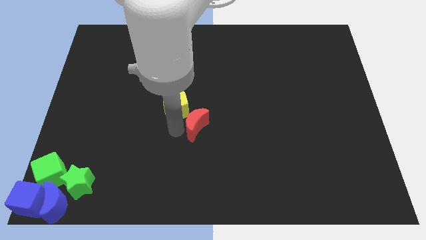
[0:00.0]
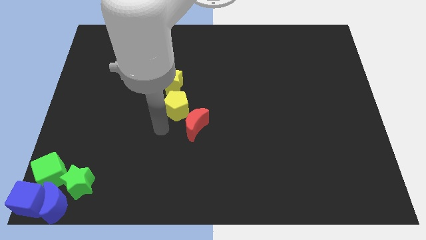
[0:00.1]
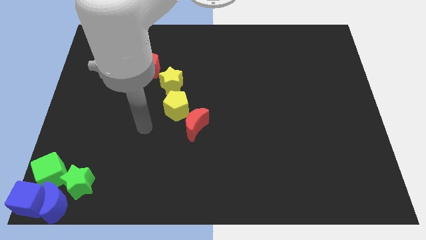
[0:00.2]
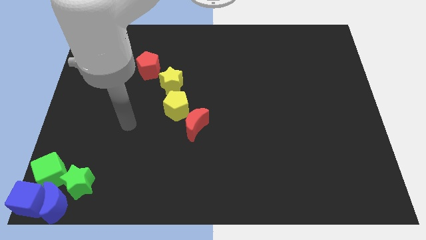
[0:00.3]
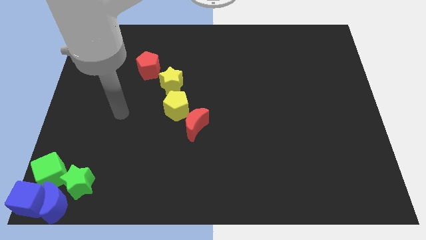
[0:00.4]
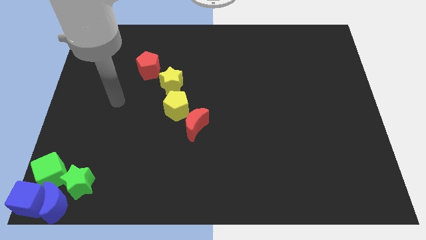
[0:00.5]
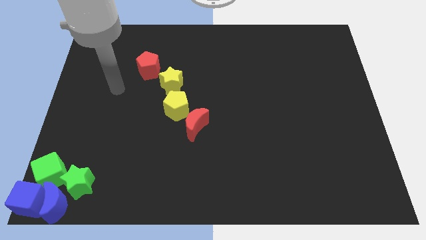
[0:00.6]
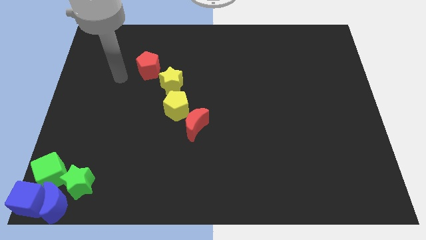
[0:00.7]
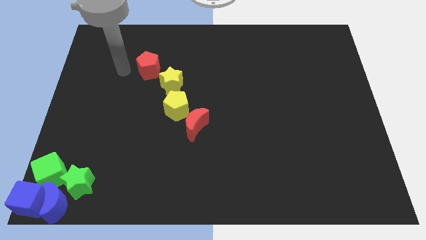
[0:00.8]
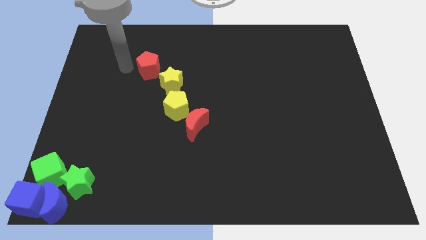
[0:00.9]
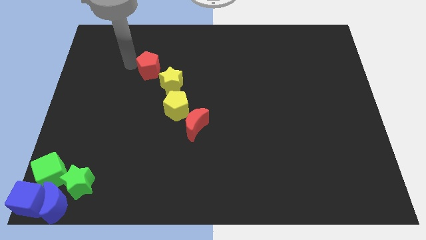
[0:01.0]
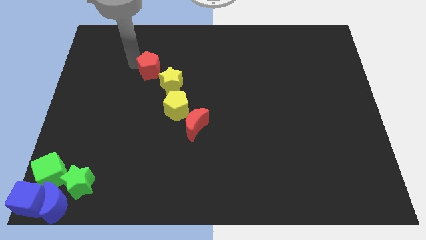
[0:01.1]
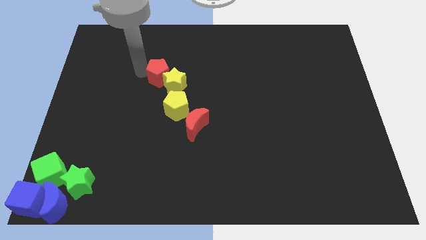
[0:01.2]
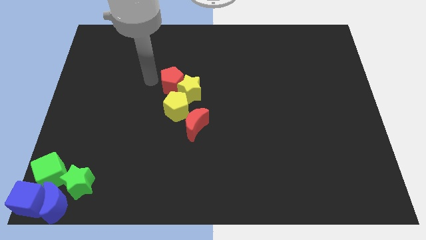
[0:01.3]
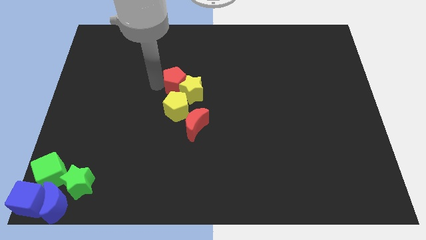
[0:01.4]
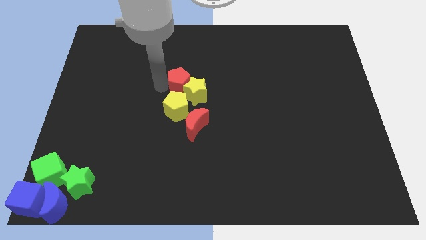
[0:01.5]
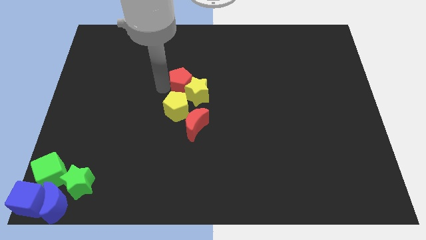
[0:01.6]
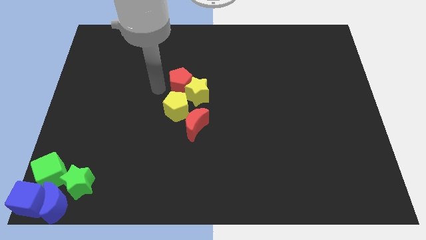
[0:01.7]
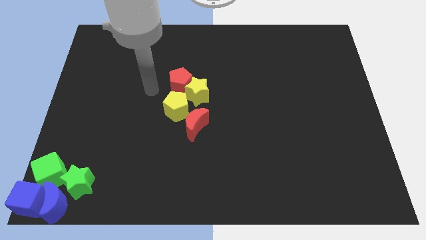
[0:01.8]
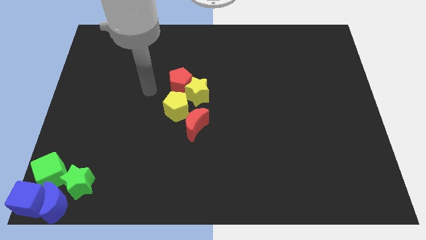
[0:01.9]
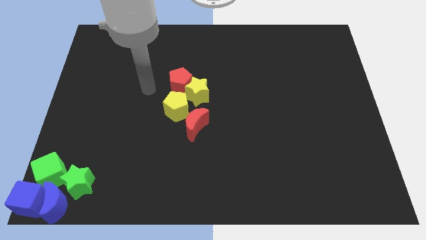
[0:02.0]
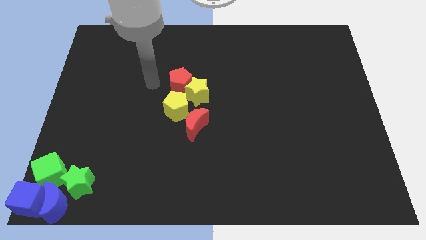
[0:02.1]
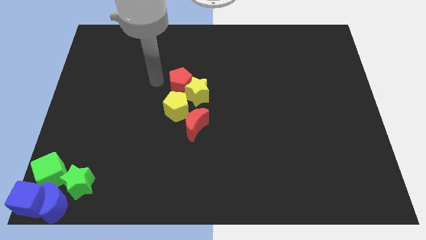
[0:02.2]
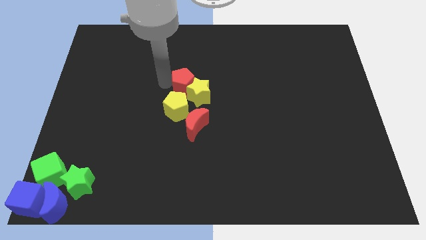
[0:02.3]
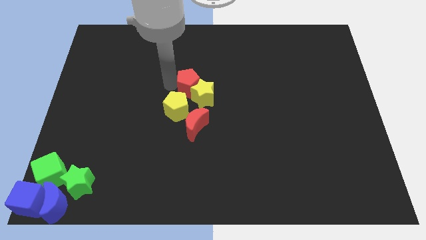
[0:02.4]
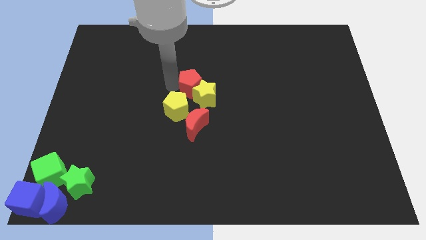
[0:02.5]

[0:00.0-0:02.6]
place red pentagon to the center

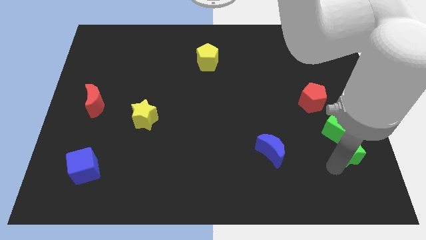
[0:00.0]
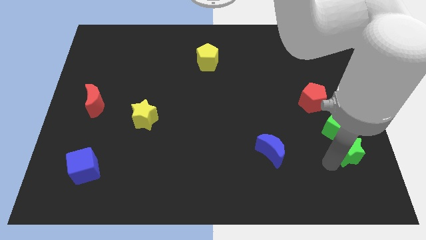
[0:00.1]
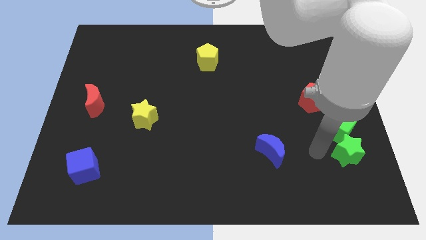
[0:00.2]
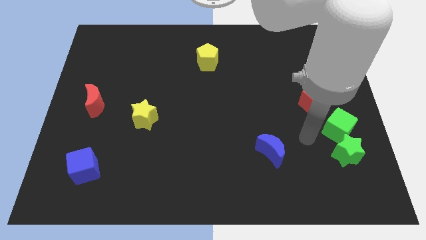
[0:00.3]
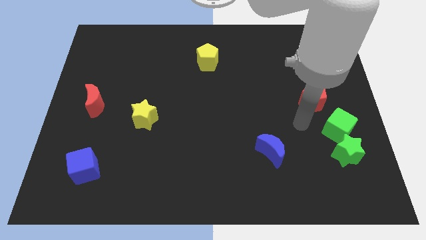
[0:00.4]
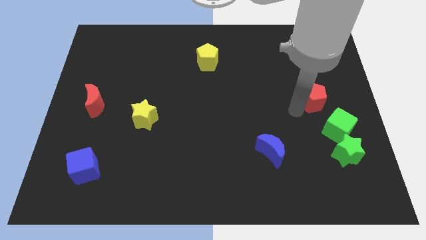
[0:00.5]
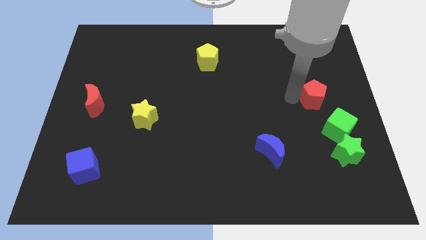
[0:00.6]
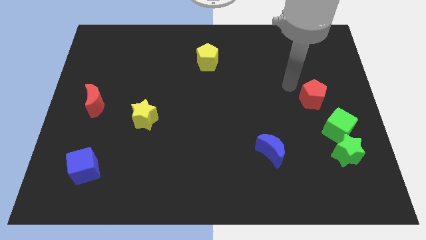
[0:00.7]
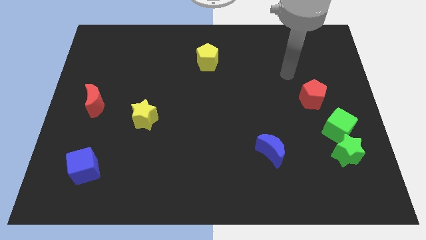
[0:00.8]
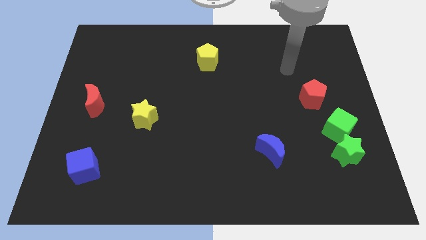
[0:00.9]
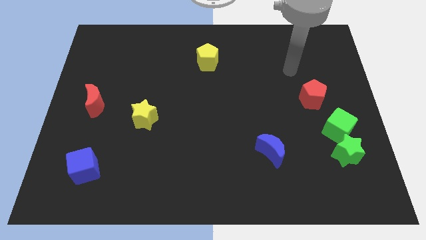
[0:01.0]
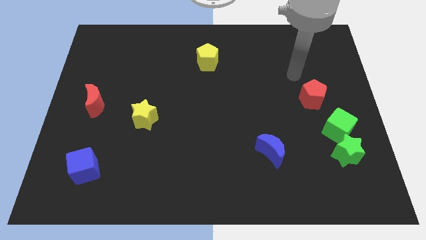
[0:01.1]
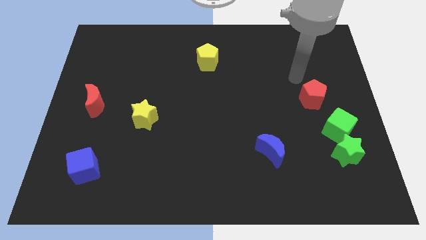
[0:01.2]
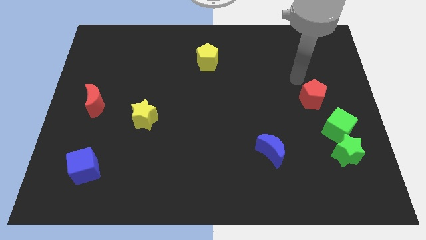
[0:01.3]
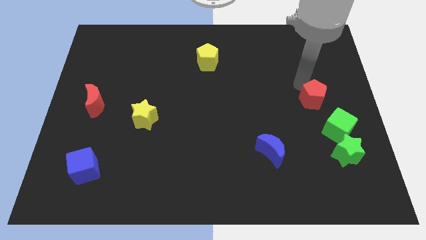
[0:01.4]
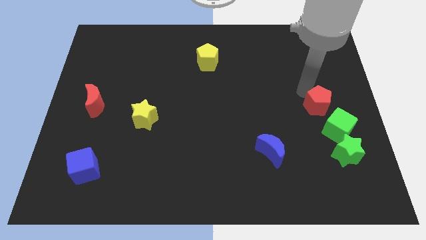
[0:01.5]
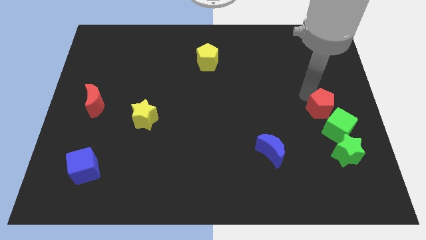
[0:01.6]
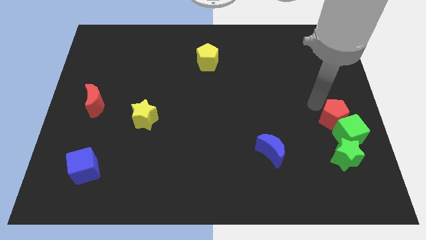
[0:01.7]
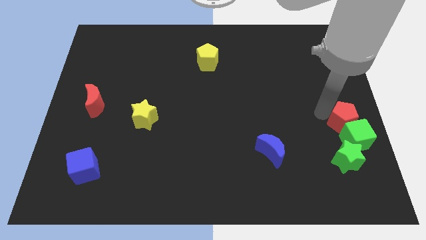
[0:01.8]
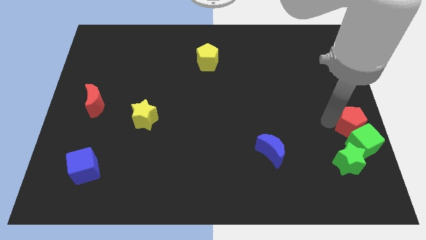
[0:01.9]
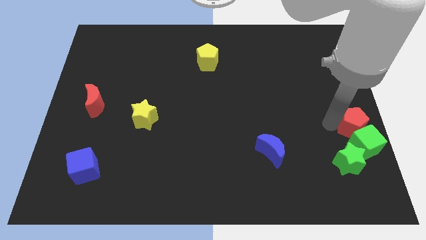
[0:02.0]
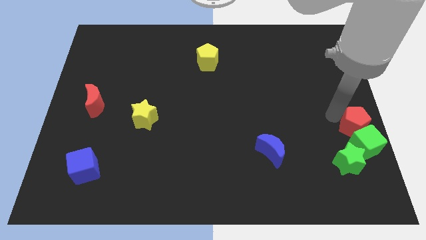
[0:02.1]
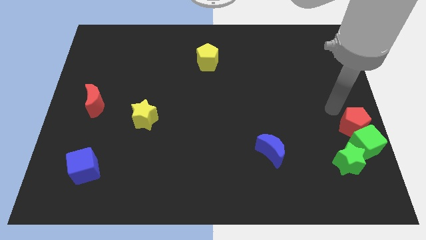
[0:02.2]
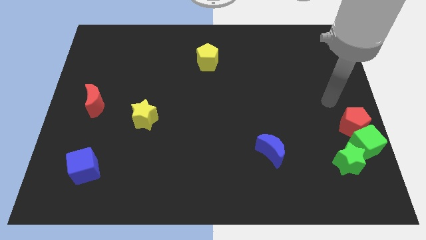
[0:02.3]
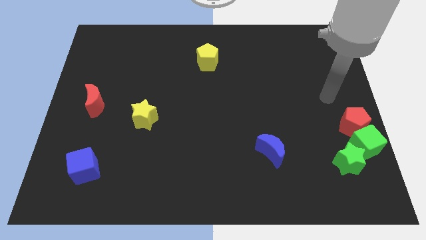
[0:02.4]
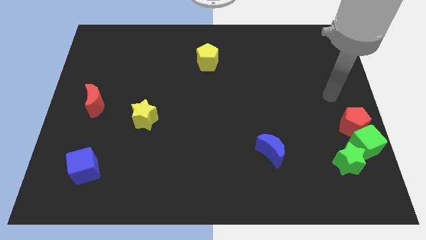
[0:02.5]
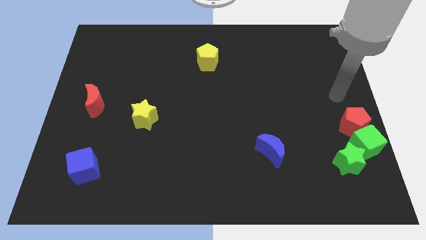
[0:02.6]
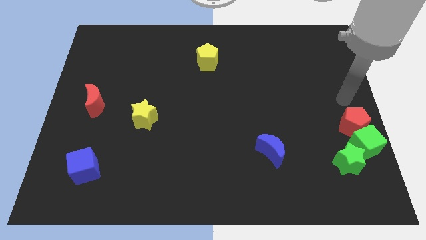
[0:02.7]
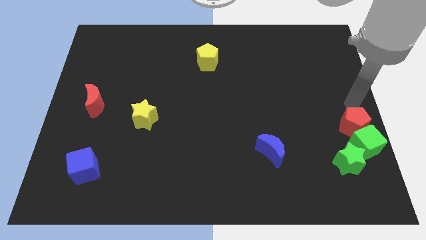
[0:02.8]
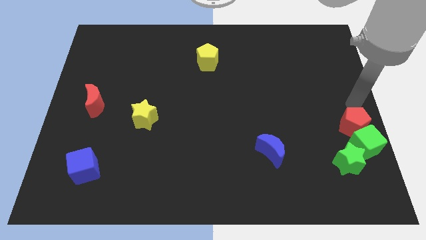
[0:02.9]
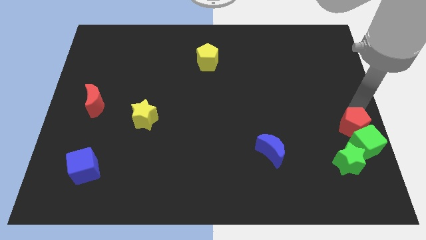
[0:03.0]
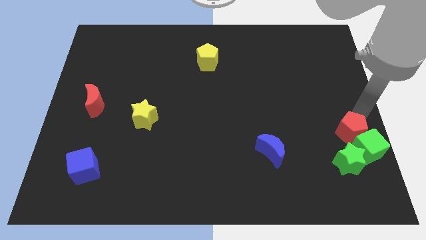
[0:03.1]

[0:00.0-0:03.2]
push the red pentagon into the green cube and green star

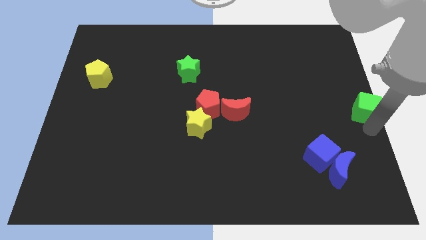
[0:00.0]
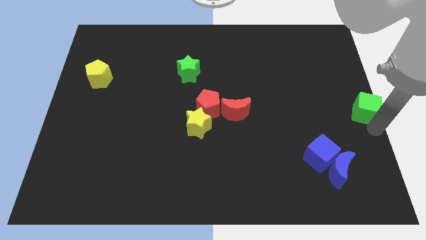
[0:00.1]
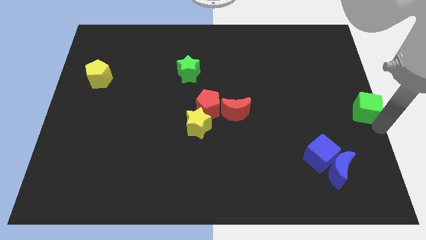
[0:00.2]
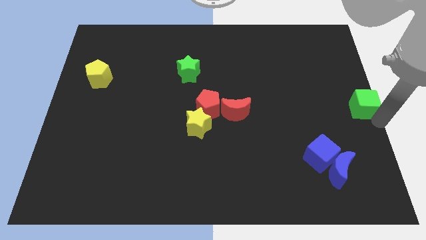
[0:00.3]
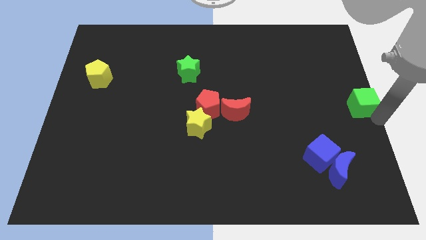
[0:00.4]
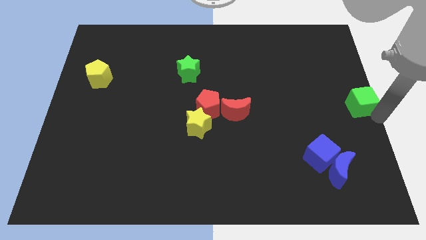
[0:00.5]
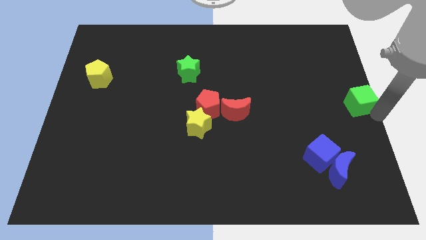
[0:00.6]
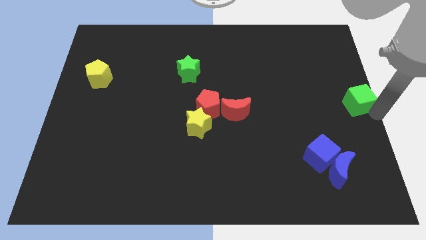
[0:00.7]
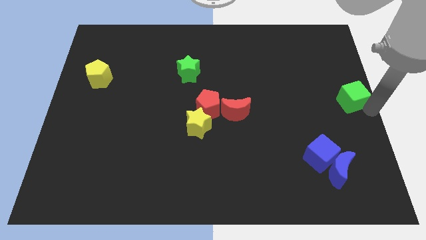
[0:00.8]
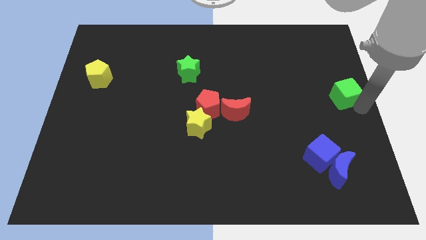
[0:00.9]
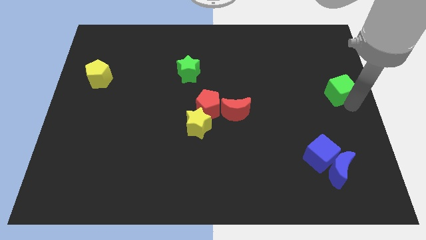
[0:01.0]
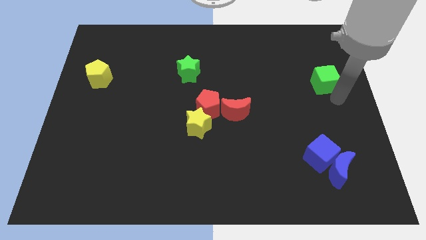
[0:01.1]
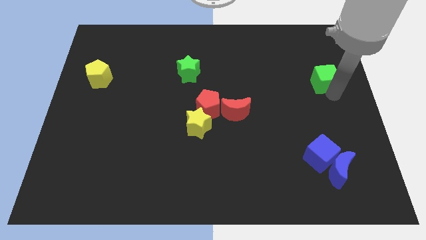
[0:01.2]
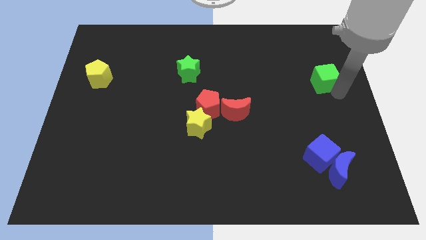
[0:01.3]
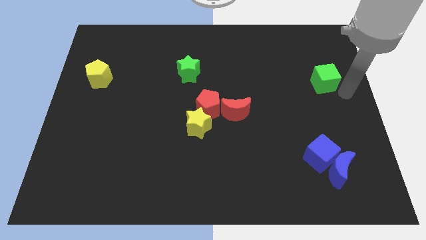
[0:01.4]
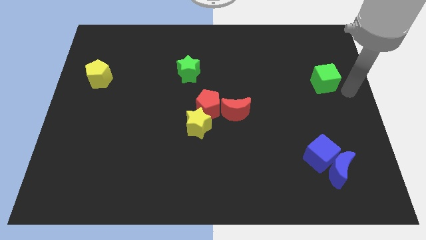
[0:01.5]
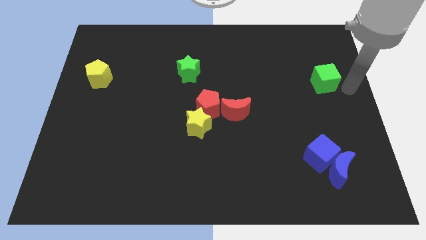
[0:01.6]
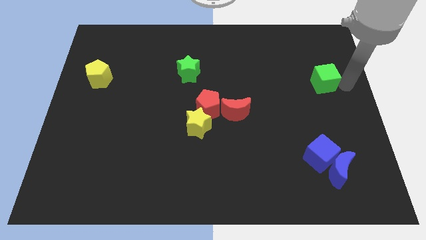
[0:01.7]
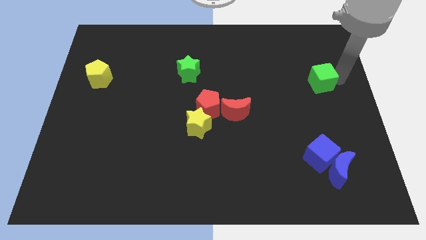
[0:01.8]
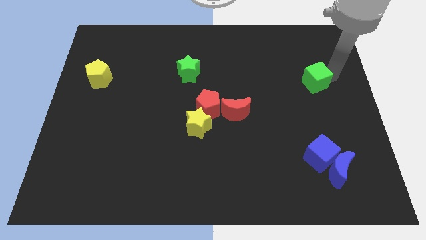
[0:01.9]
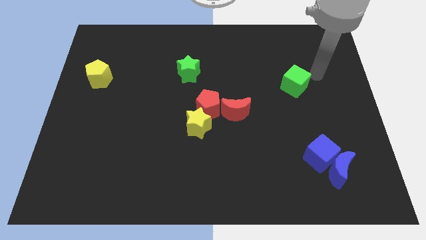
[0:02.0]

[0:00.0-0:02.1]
put the green cube diagonally to red moon

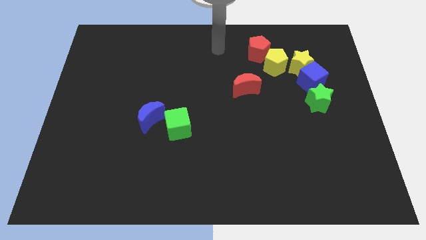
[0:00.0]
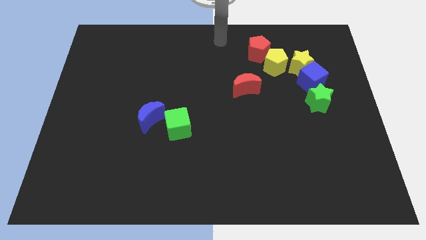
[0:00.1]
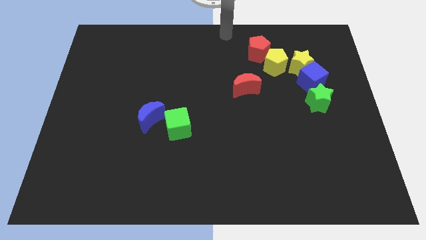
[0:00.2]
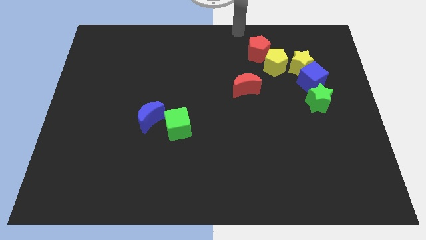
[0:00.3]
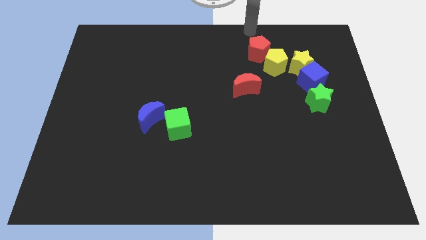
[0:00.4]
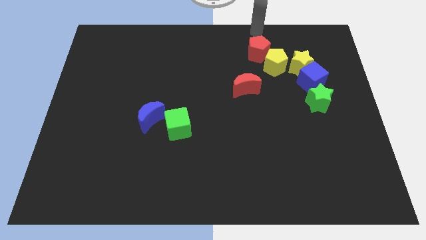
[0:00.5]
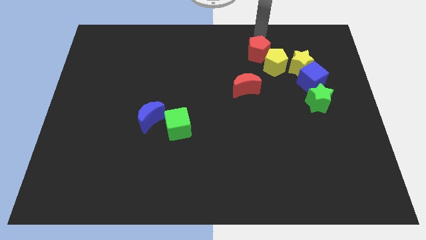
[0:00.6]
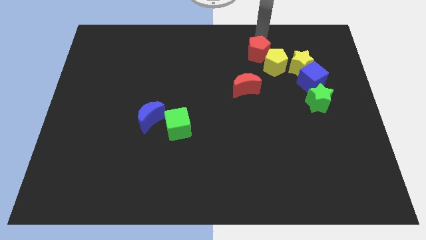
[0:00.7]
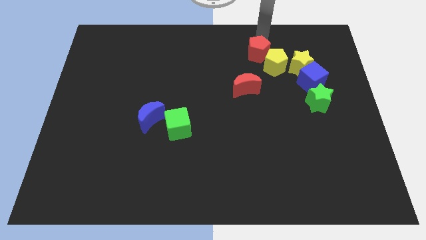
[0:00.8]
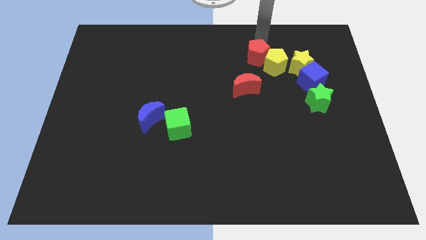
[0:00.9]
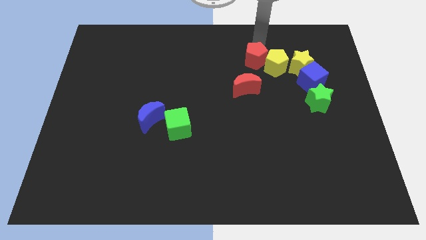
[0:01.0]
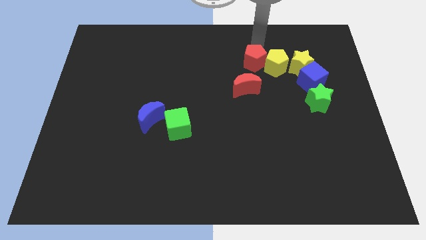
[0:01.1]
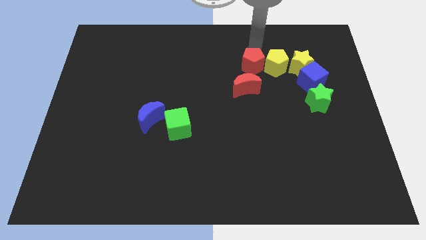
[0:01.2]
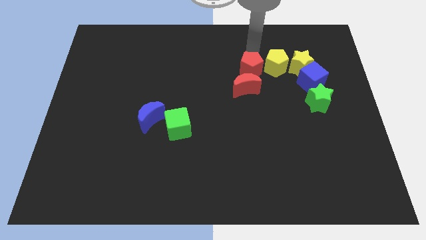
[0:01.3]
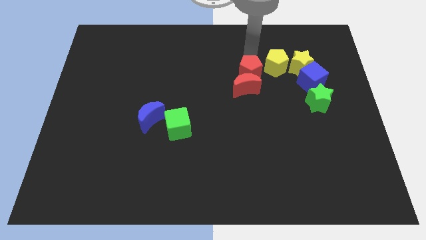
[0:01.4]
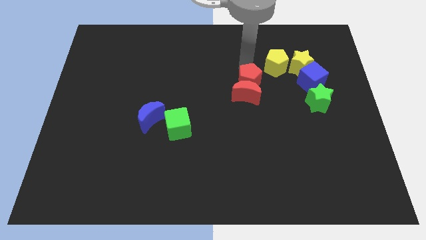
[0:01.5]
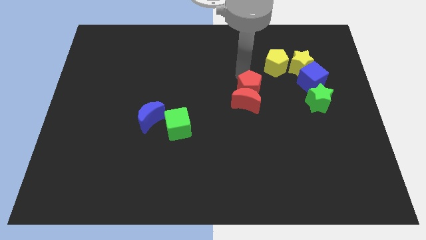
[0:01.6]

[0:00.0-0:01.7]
push the red pentagon into the red crescent
